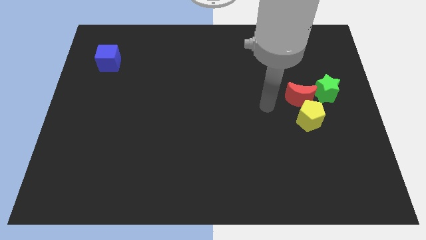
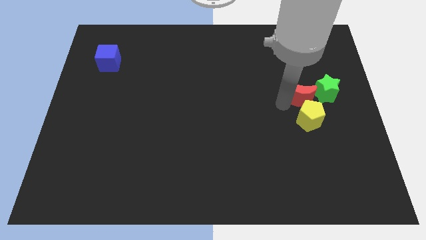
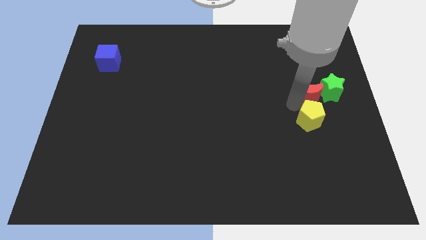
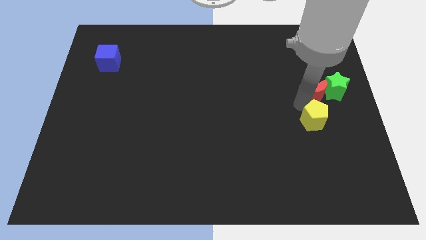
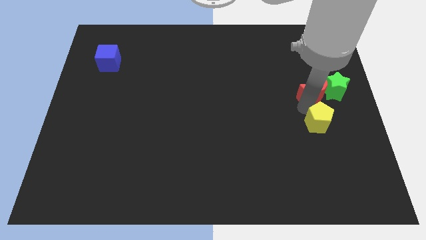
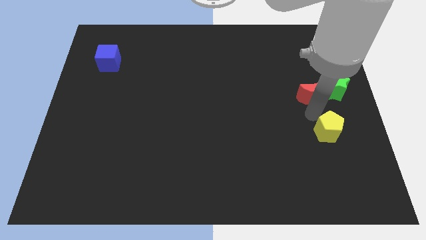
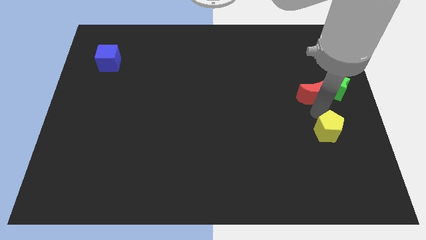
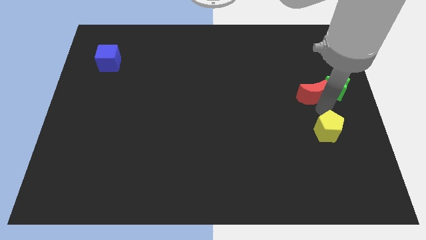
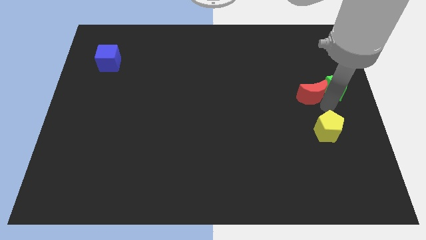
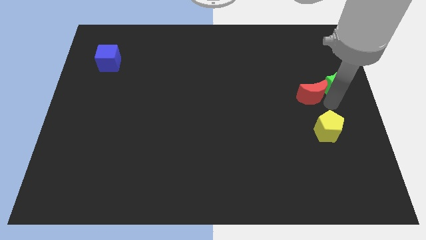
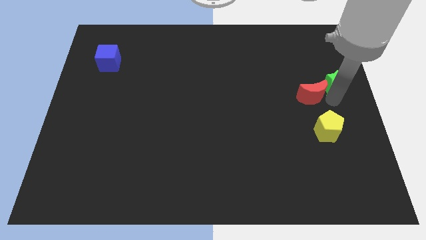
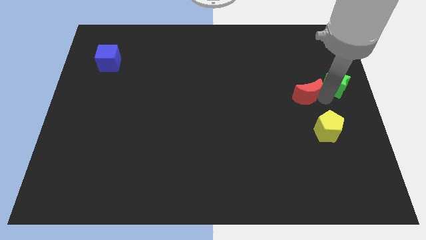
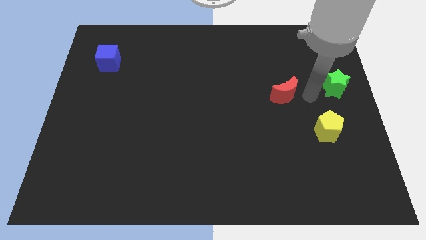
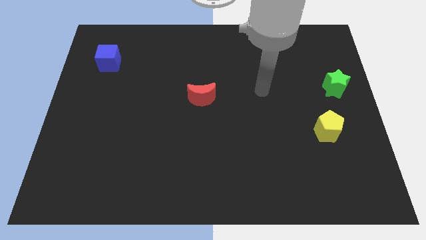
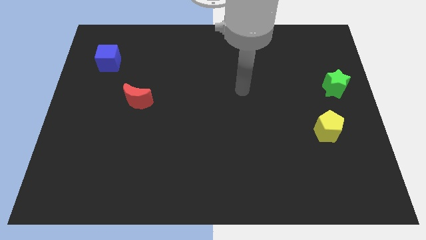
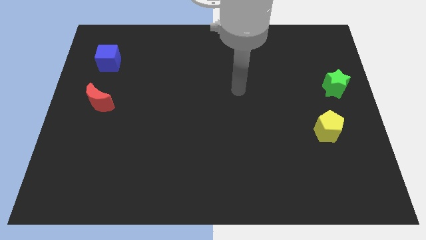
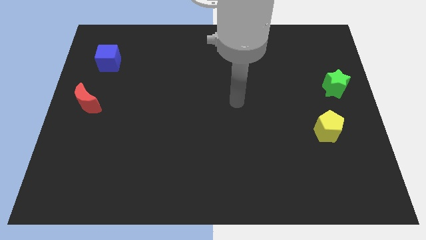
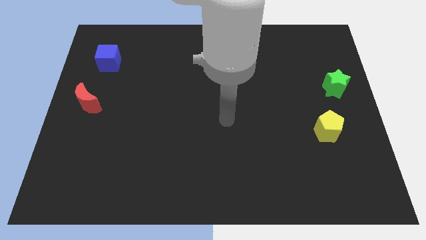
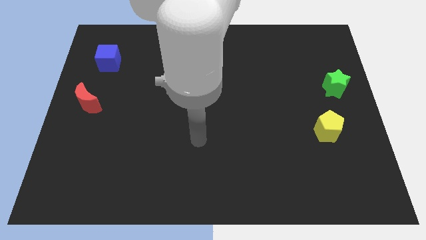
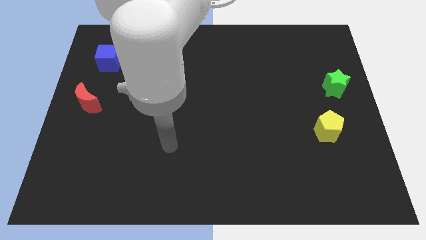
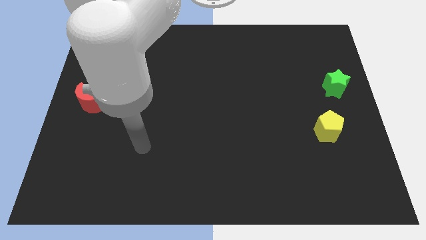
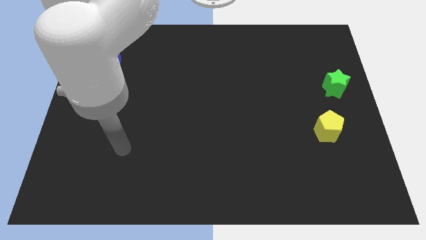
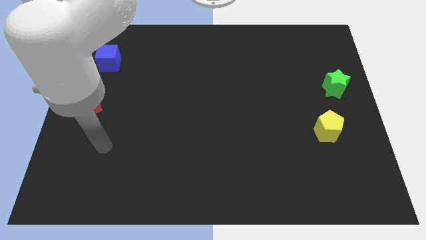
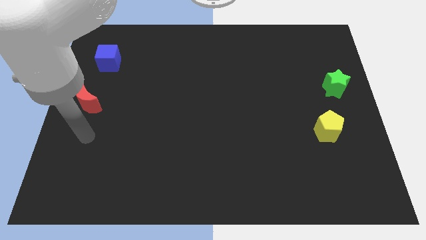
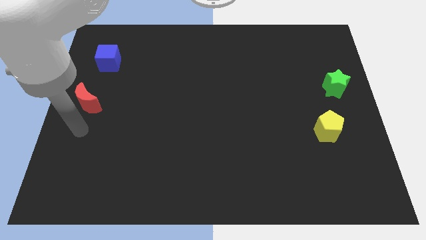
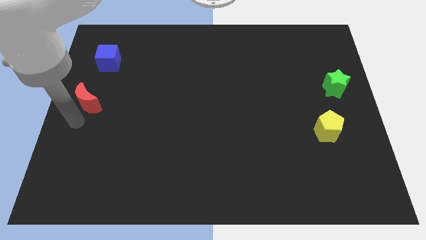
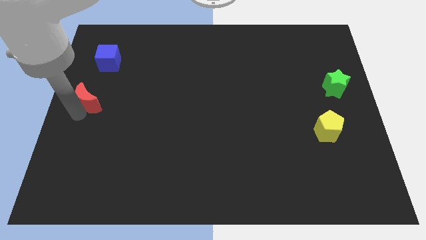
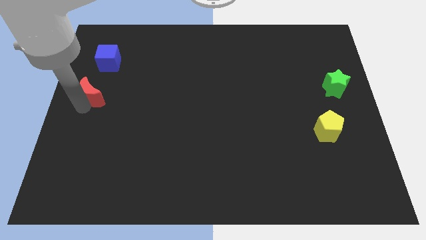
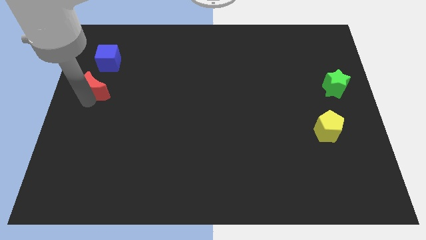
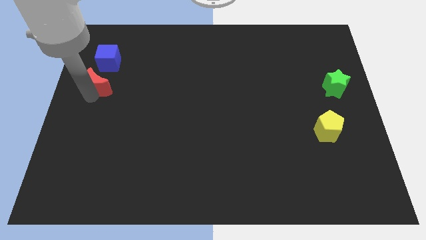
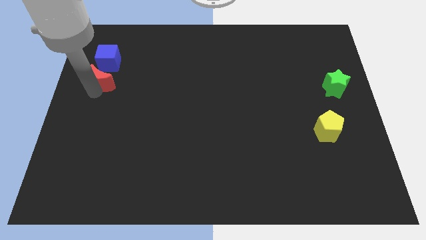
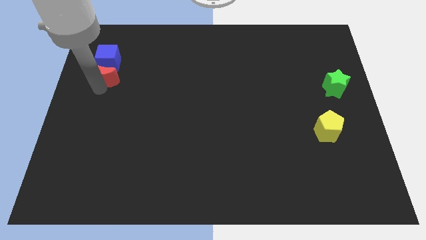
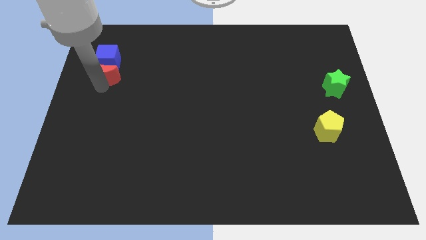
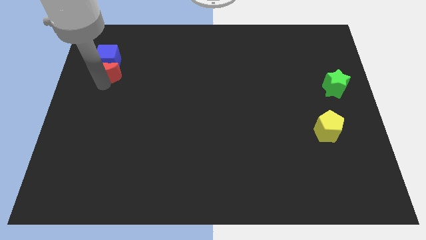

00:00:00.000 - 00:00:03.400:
put the moon towards the cube

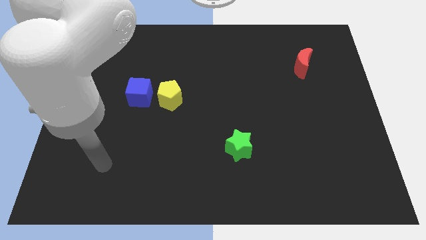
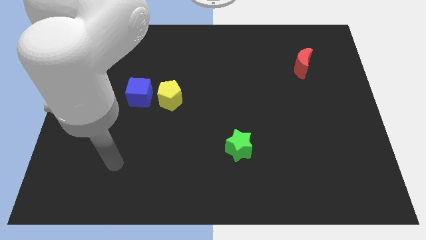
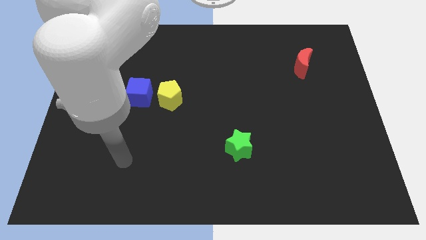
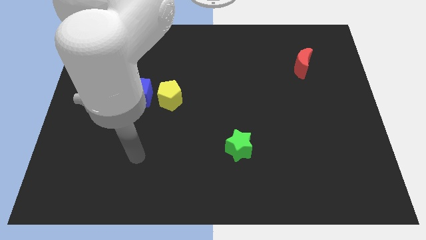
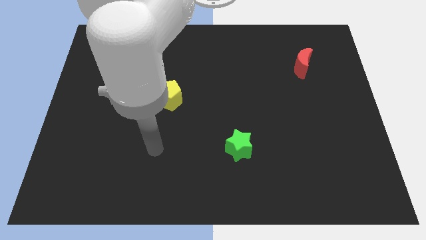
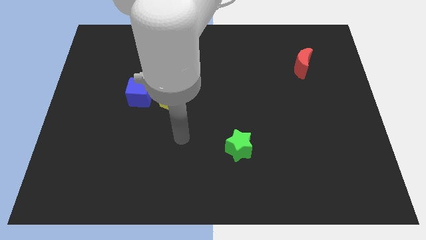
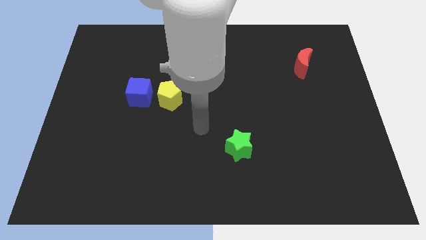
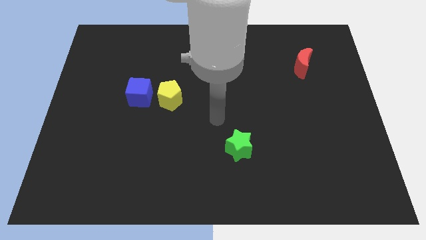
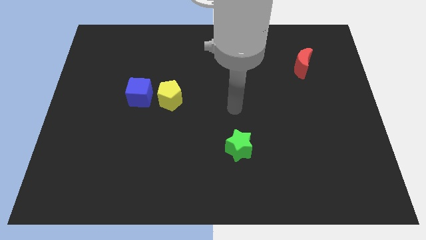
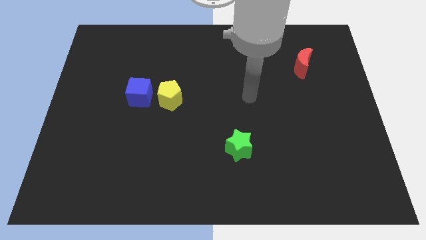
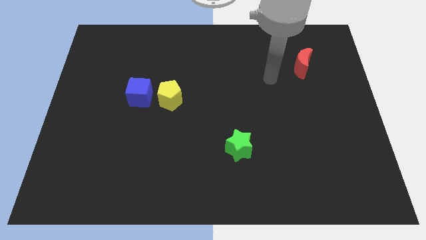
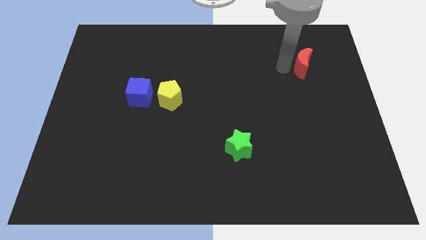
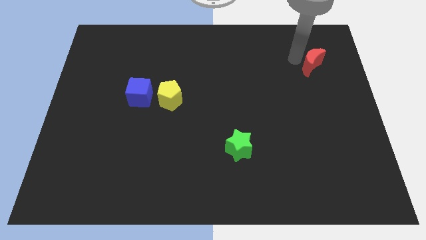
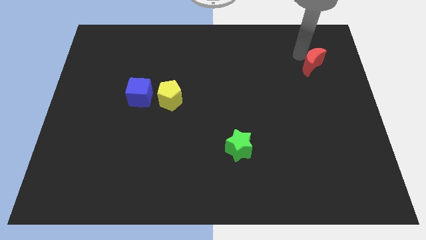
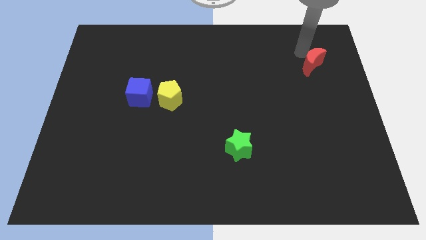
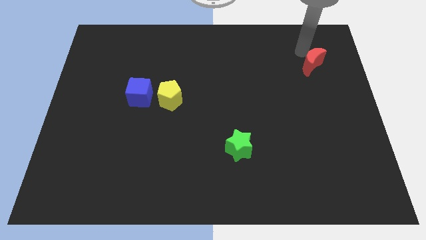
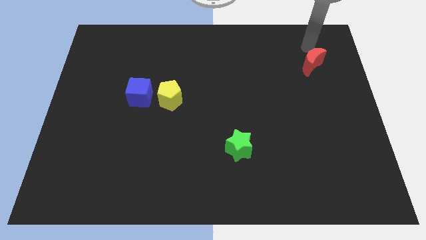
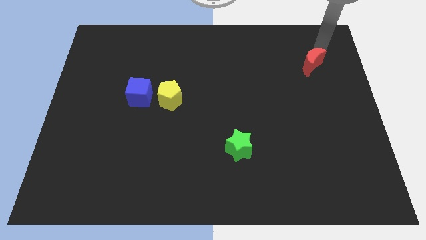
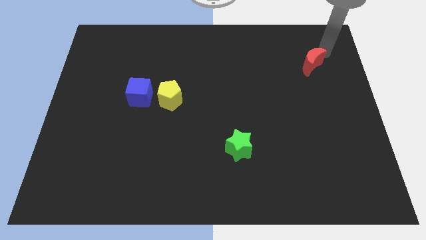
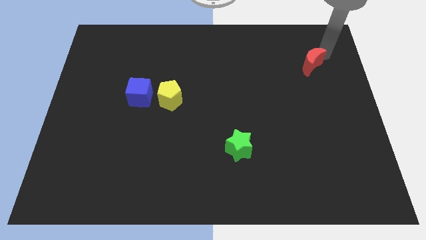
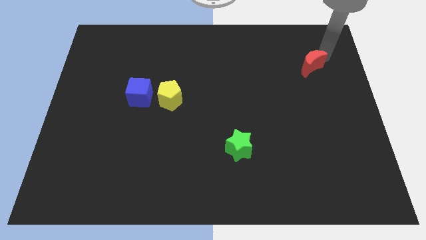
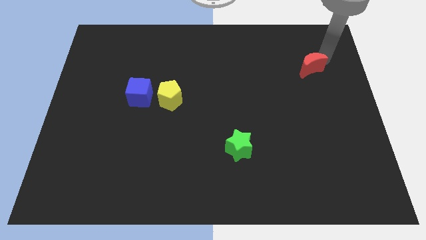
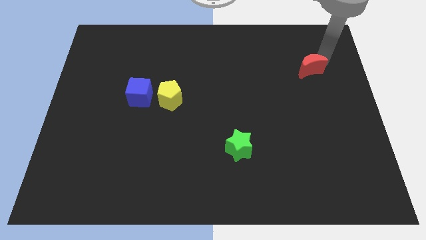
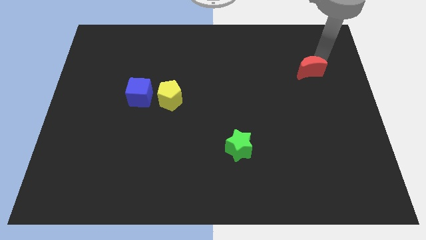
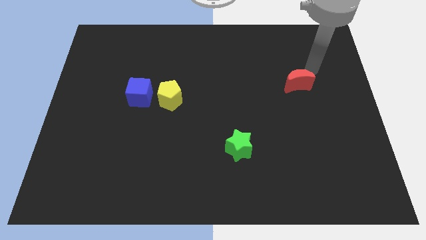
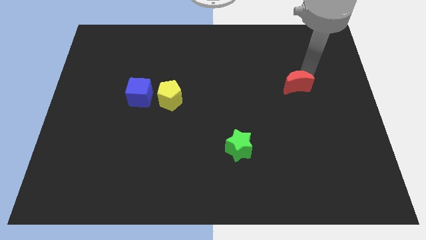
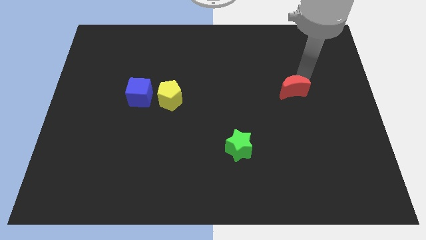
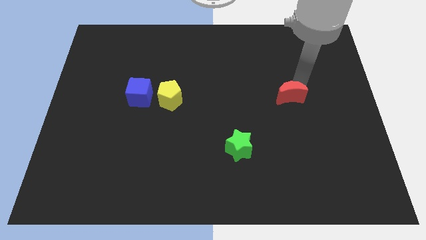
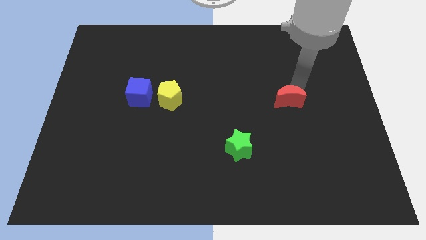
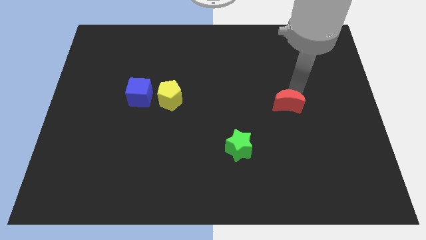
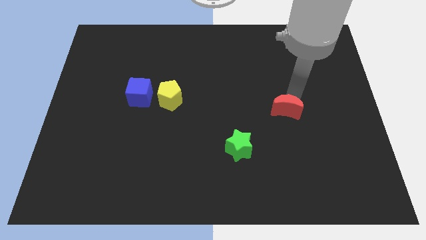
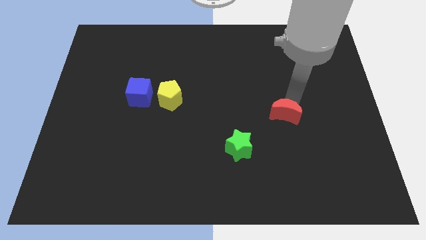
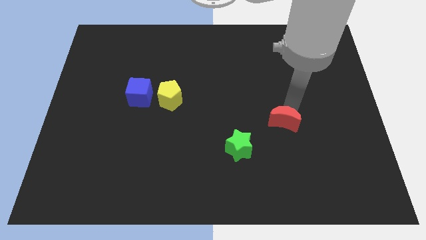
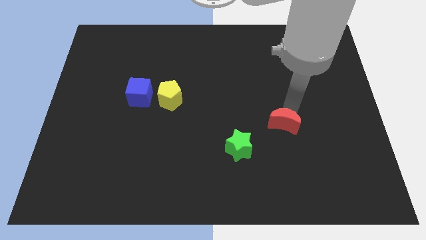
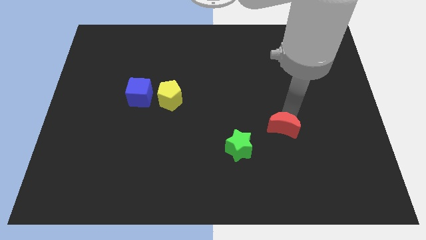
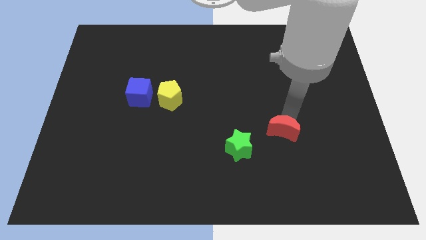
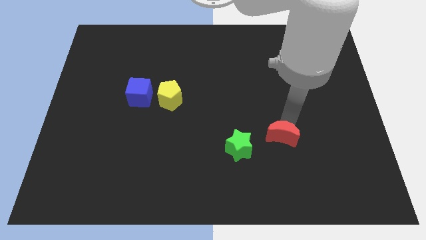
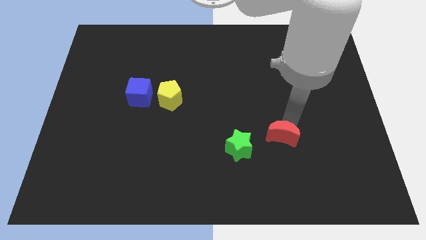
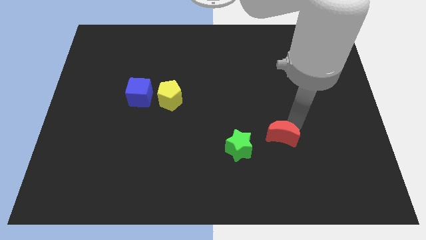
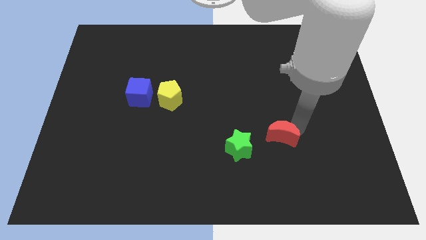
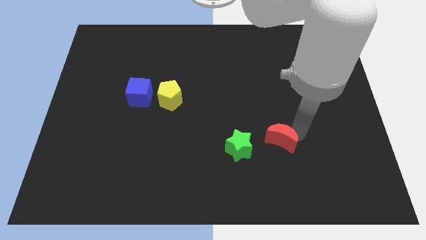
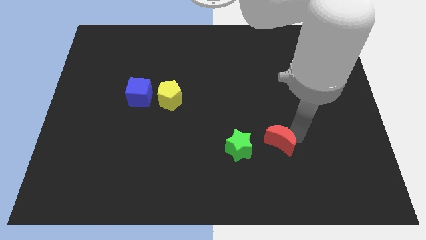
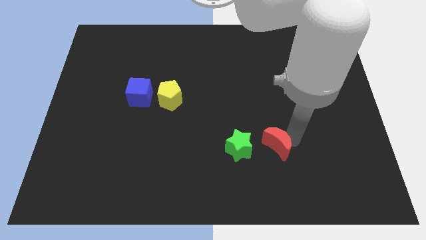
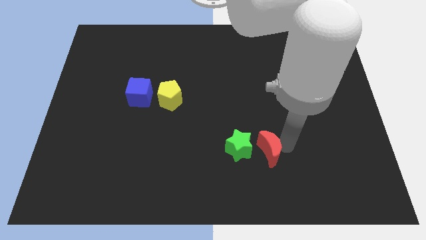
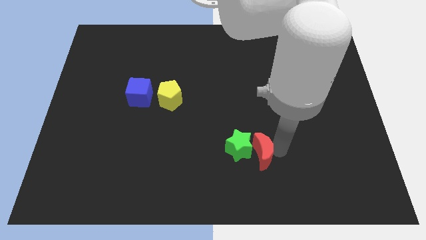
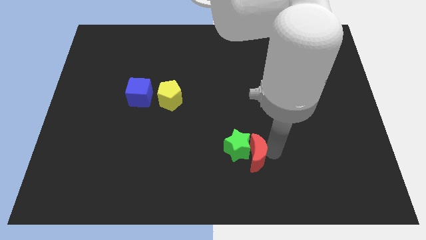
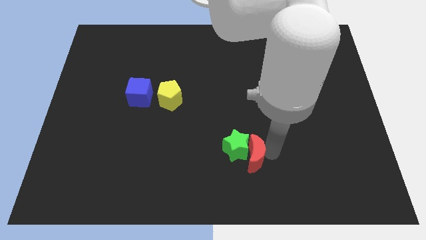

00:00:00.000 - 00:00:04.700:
slide the red moon next to the green star
